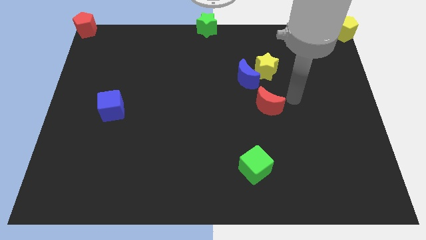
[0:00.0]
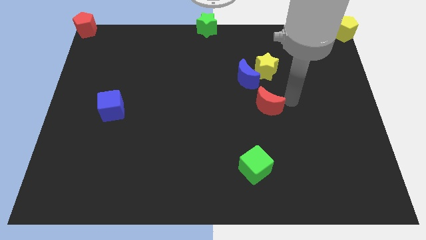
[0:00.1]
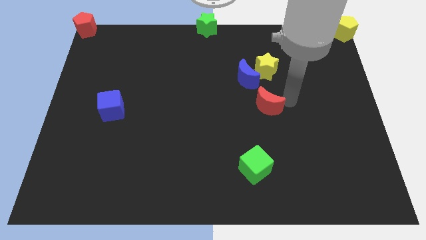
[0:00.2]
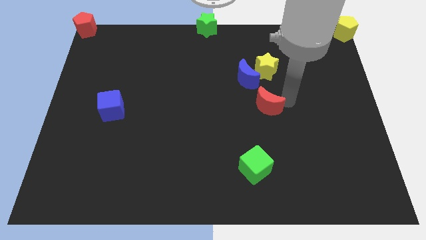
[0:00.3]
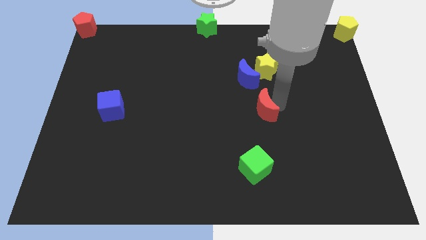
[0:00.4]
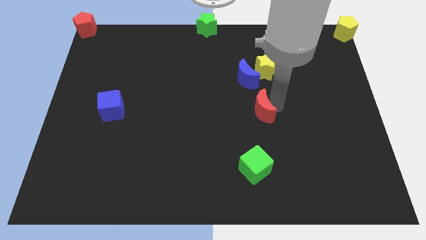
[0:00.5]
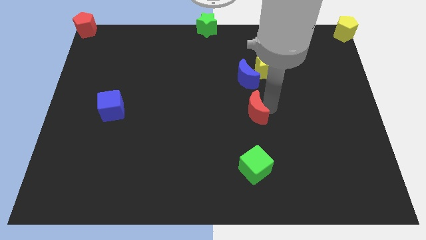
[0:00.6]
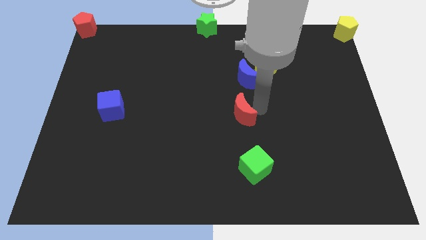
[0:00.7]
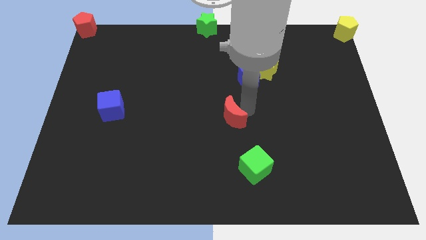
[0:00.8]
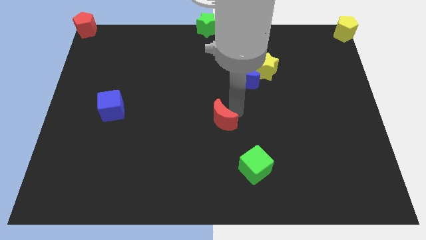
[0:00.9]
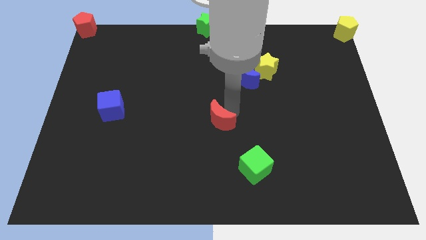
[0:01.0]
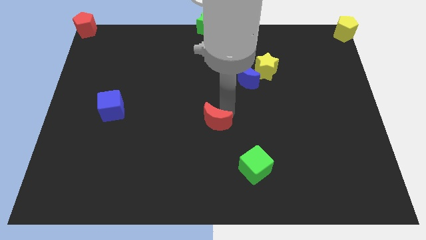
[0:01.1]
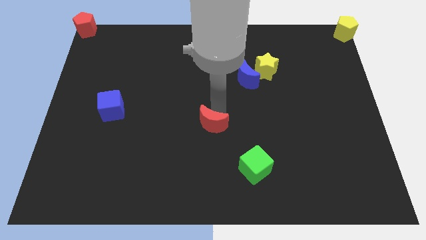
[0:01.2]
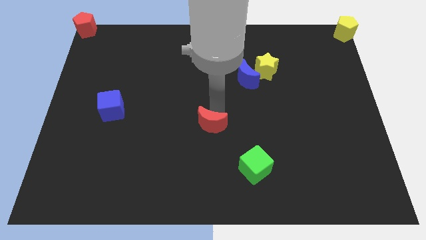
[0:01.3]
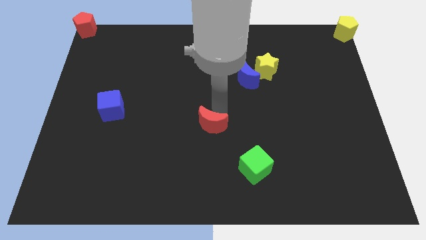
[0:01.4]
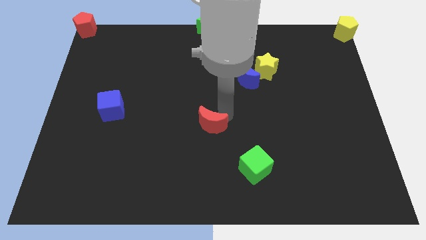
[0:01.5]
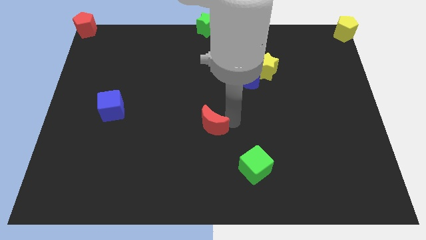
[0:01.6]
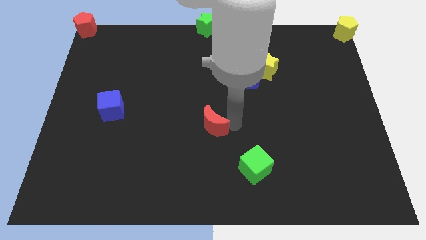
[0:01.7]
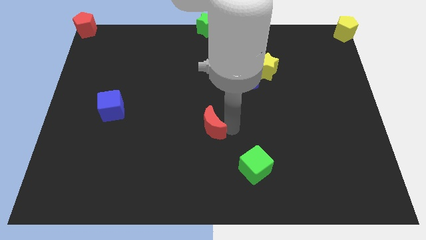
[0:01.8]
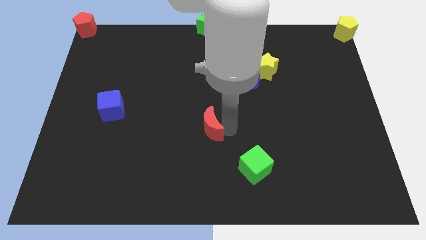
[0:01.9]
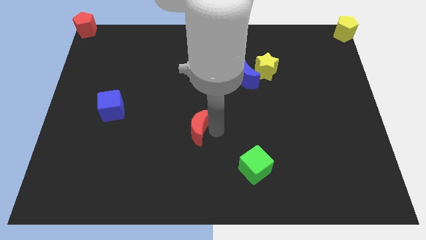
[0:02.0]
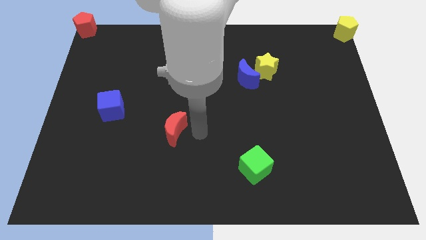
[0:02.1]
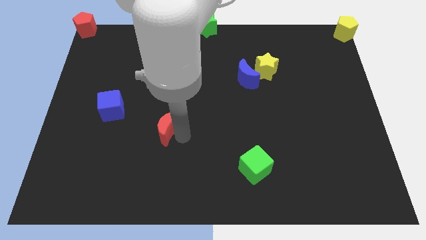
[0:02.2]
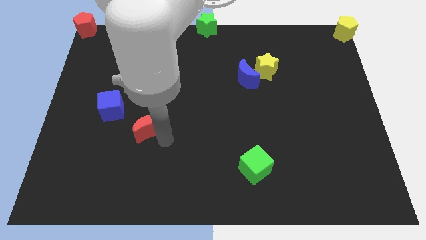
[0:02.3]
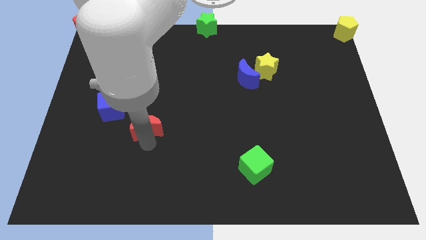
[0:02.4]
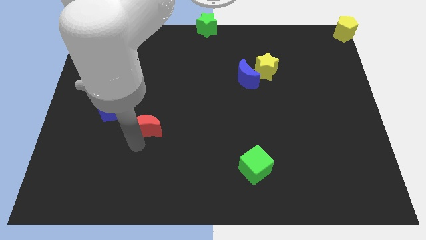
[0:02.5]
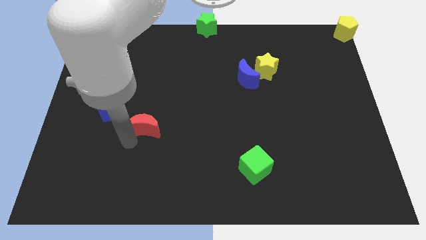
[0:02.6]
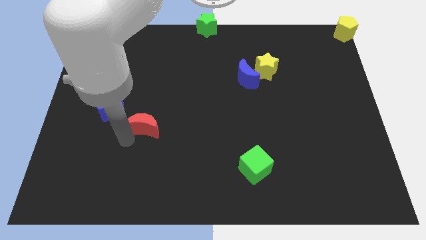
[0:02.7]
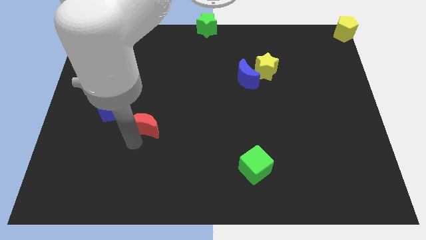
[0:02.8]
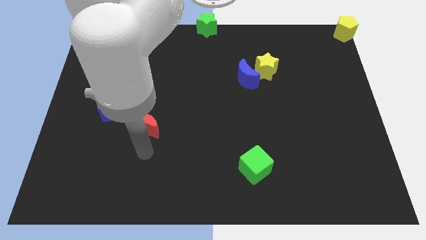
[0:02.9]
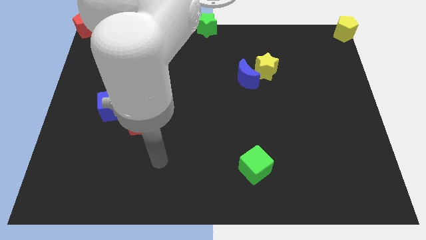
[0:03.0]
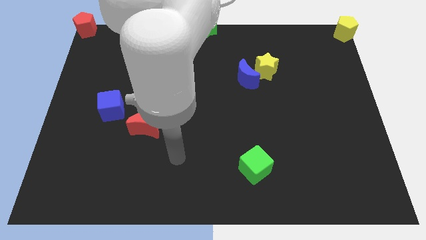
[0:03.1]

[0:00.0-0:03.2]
place the red moon in between the cubes

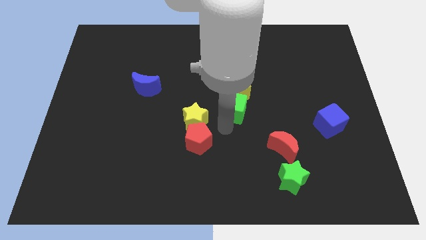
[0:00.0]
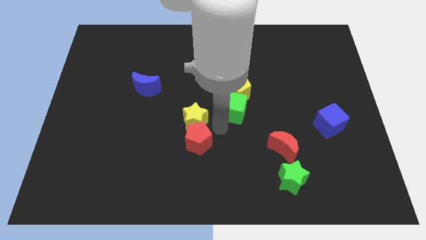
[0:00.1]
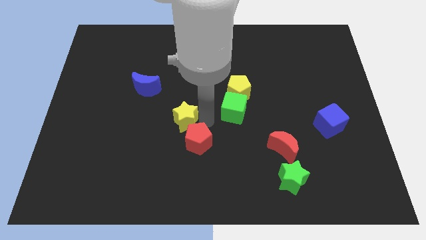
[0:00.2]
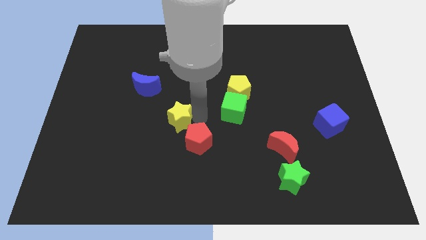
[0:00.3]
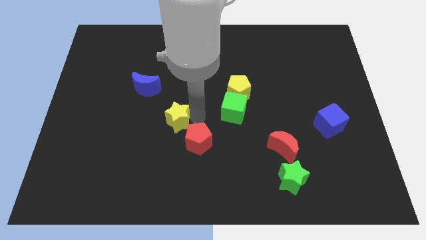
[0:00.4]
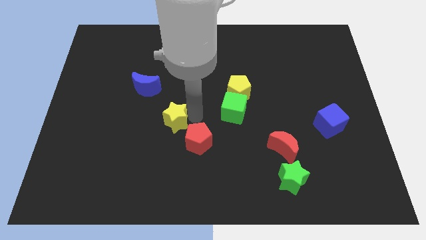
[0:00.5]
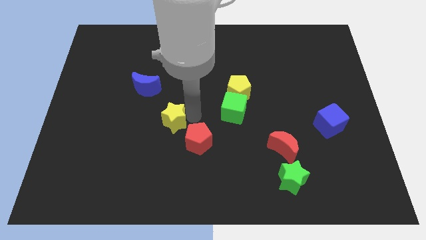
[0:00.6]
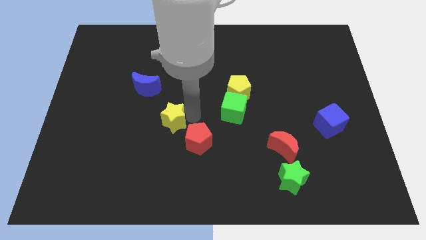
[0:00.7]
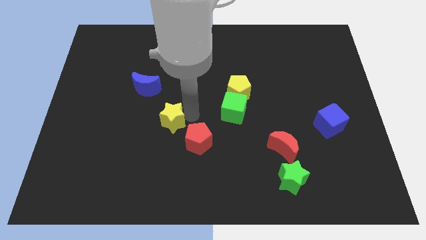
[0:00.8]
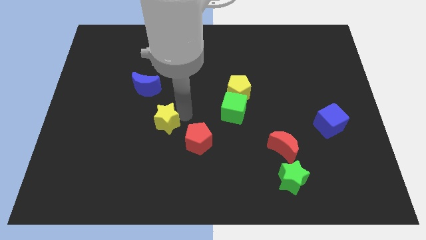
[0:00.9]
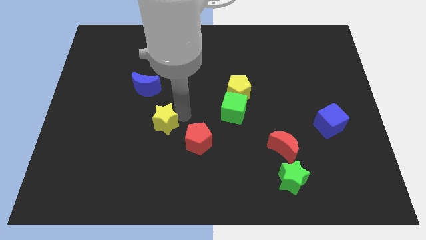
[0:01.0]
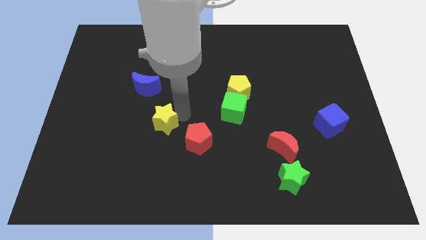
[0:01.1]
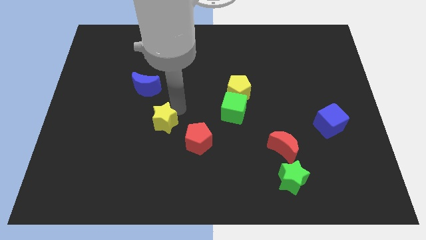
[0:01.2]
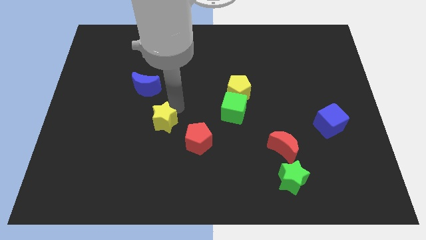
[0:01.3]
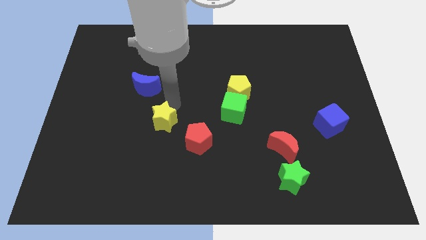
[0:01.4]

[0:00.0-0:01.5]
separate yellow star from the red pentagon

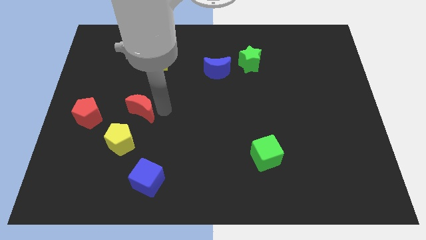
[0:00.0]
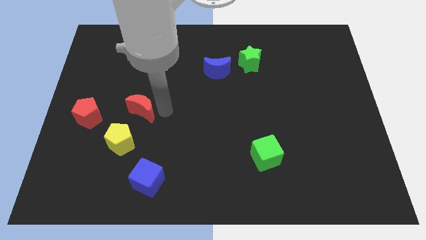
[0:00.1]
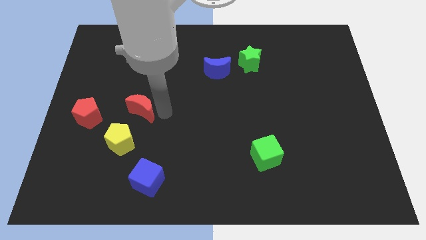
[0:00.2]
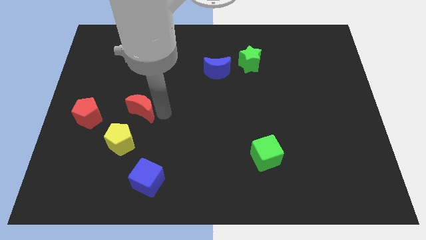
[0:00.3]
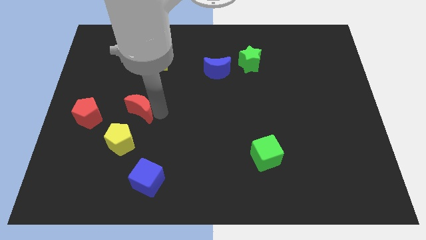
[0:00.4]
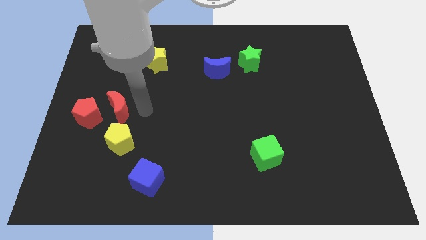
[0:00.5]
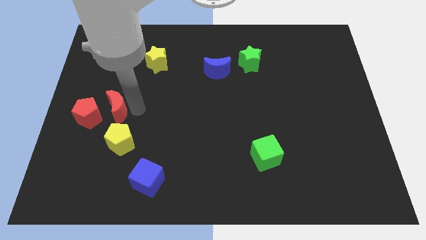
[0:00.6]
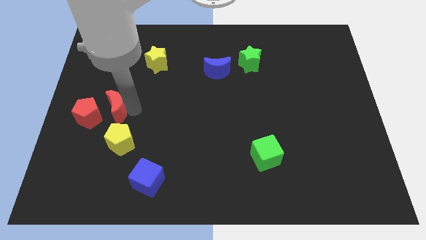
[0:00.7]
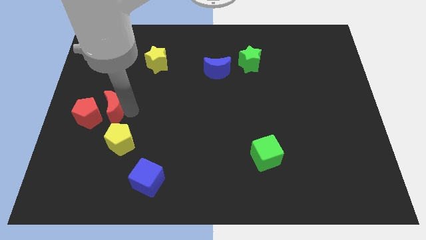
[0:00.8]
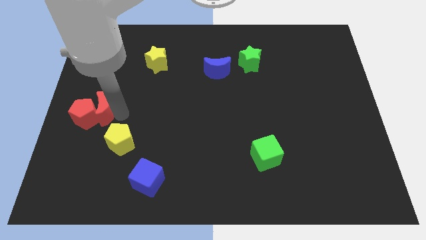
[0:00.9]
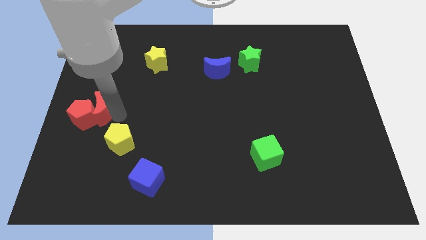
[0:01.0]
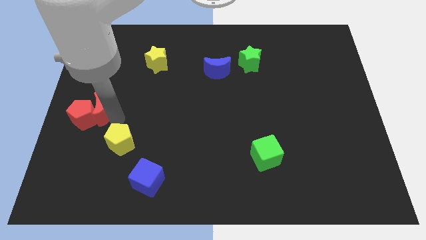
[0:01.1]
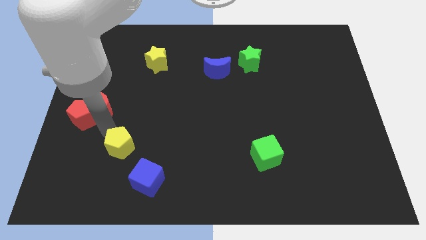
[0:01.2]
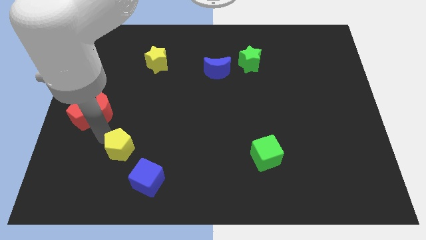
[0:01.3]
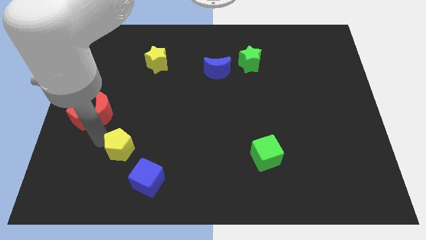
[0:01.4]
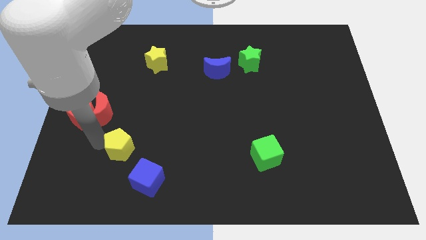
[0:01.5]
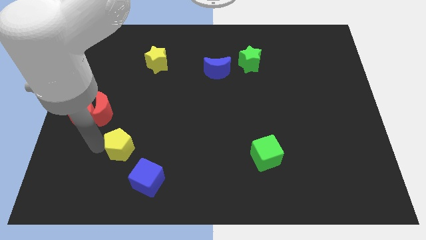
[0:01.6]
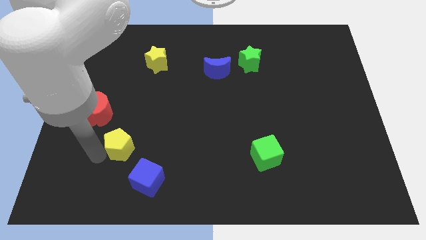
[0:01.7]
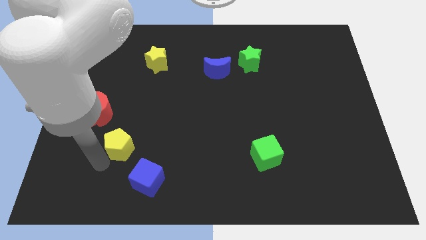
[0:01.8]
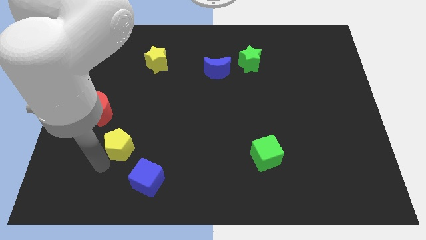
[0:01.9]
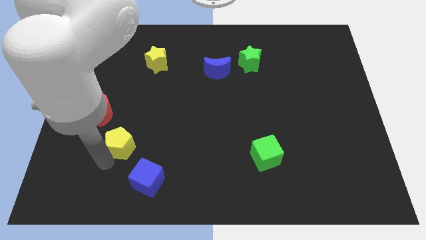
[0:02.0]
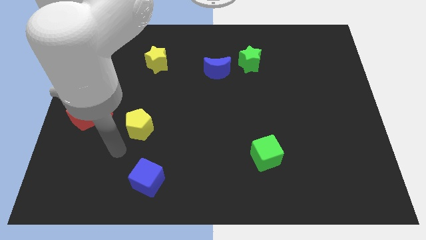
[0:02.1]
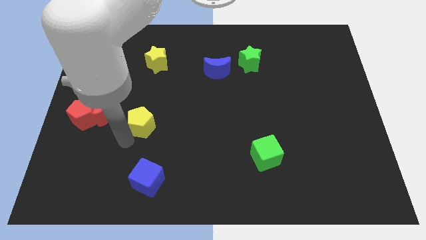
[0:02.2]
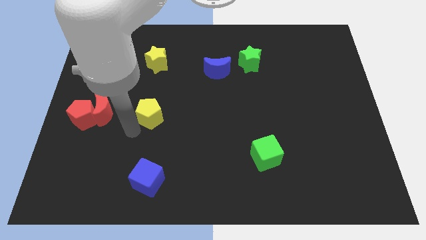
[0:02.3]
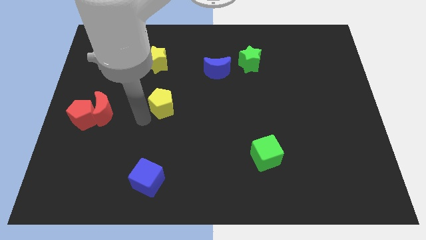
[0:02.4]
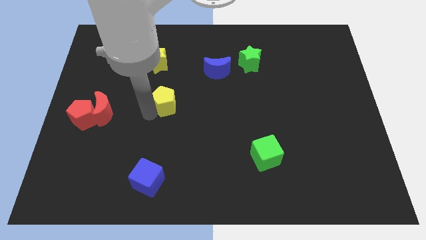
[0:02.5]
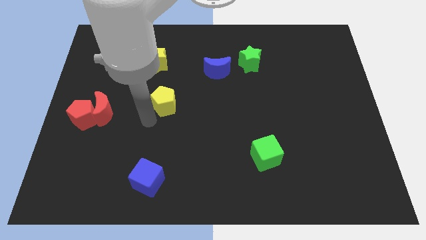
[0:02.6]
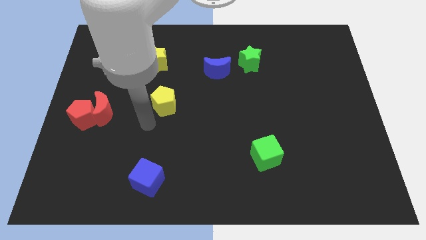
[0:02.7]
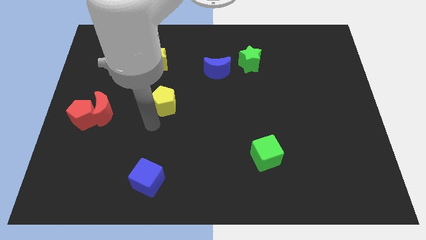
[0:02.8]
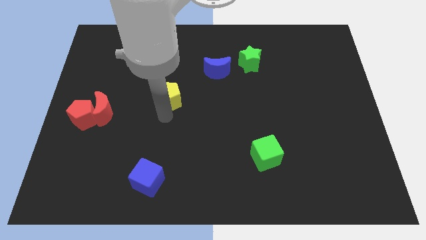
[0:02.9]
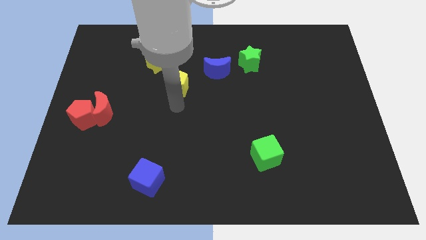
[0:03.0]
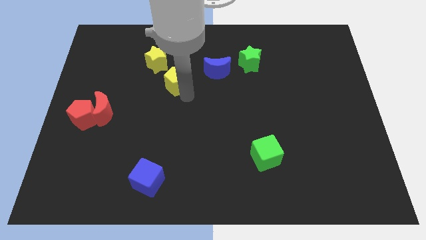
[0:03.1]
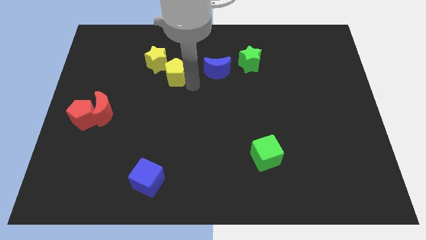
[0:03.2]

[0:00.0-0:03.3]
push the yellow pentagon into yellow star

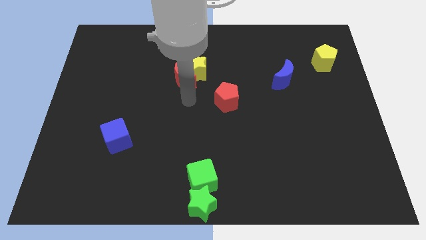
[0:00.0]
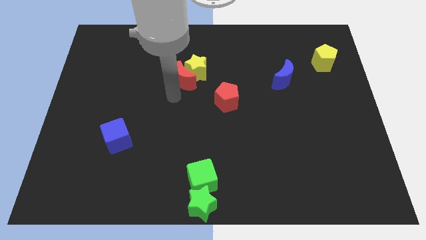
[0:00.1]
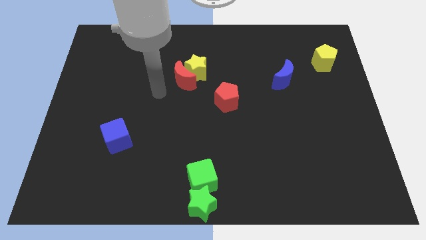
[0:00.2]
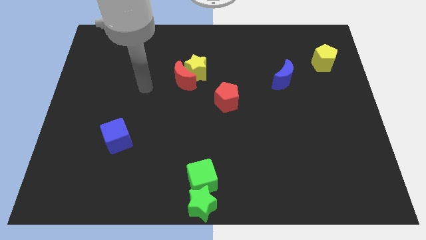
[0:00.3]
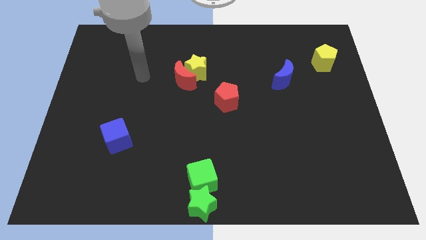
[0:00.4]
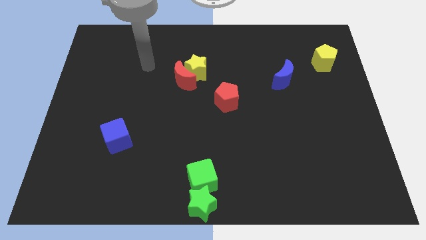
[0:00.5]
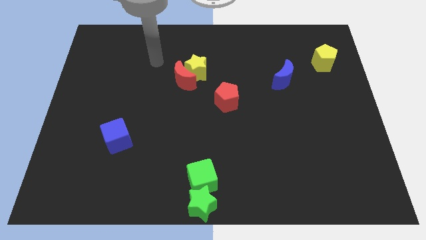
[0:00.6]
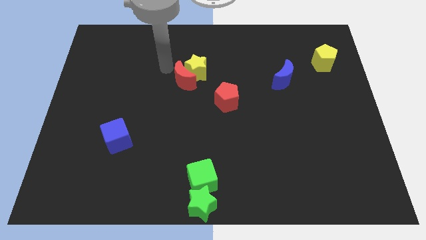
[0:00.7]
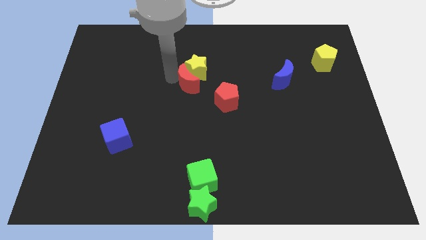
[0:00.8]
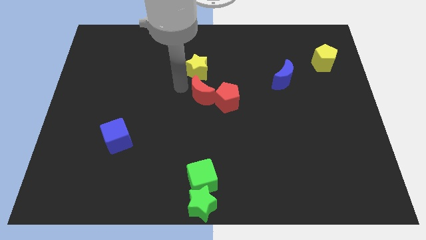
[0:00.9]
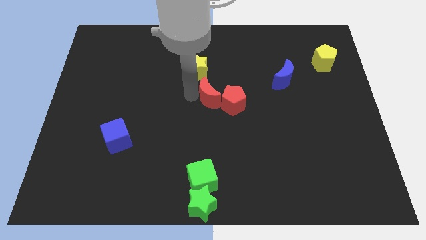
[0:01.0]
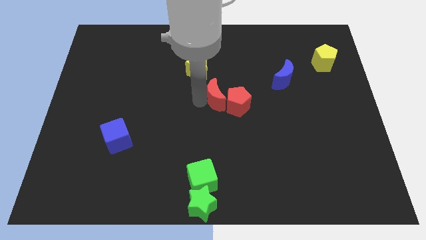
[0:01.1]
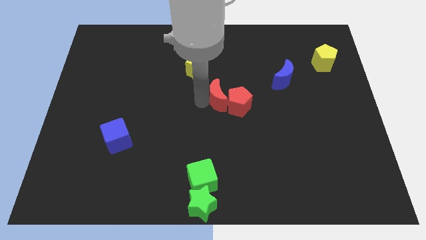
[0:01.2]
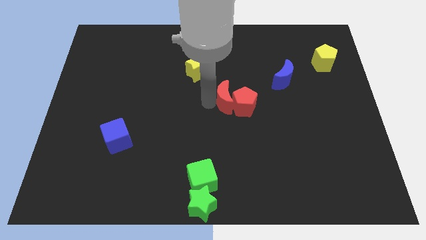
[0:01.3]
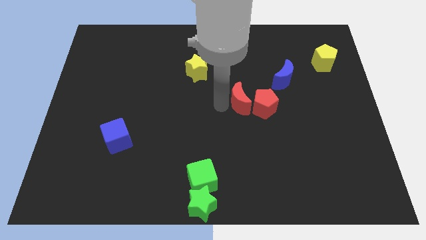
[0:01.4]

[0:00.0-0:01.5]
move the red moon into the left side of the red pentagon
